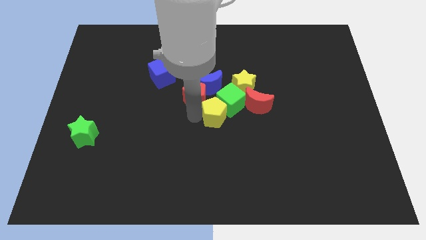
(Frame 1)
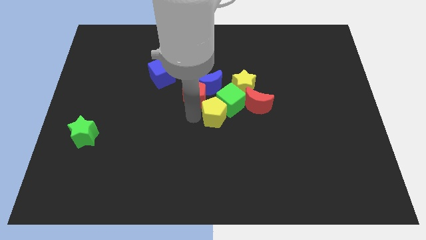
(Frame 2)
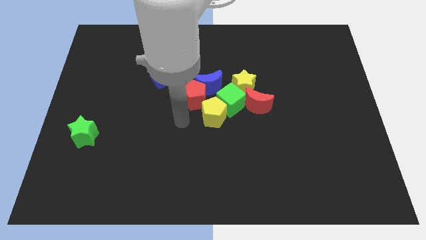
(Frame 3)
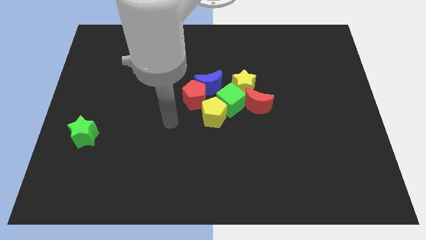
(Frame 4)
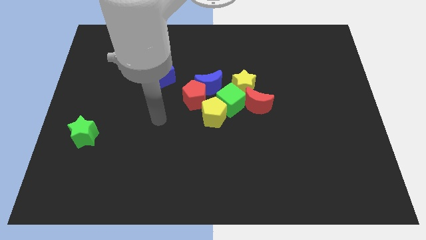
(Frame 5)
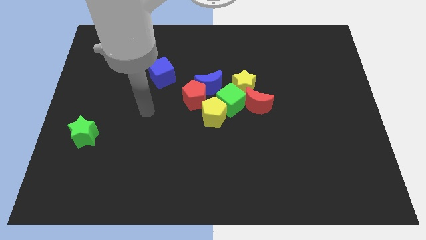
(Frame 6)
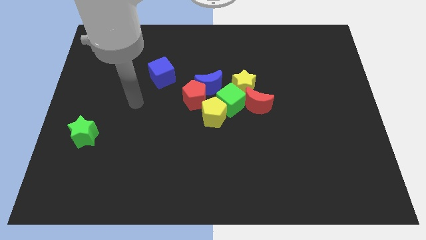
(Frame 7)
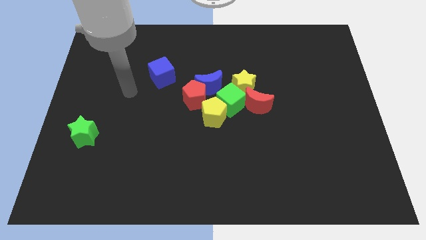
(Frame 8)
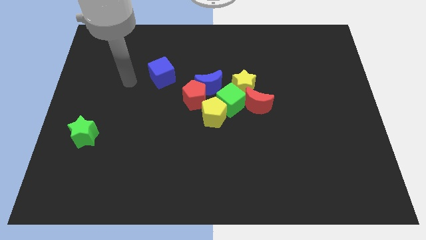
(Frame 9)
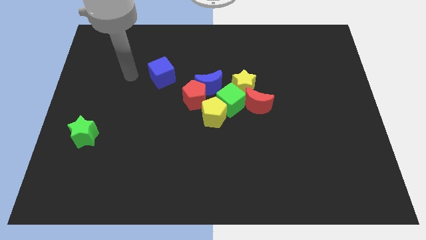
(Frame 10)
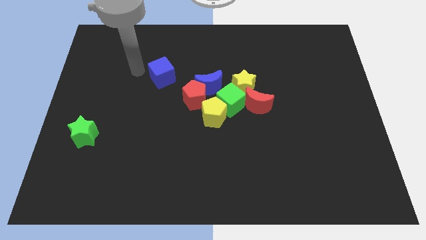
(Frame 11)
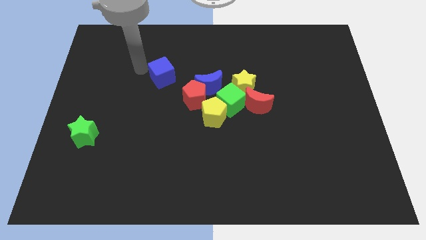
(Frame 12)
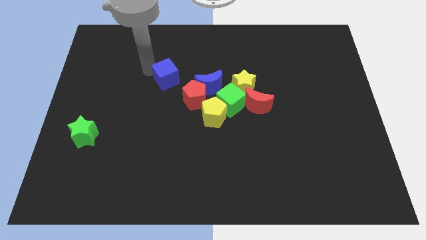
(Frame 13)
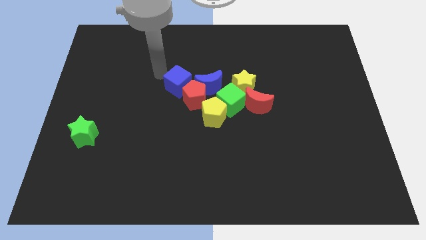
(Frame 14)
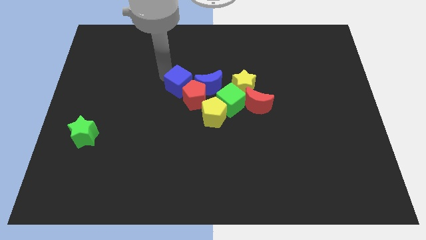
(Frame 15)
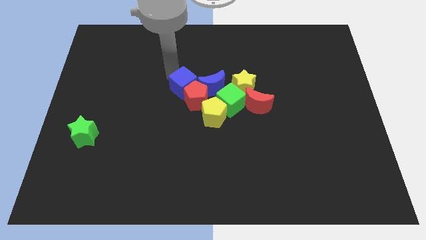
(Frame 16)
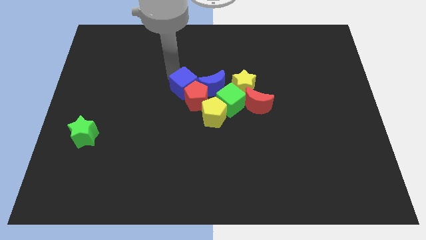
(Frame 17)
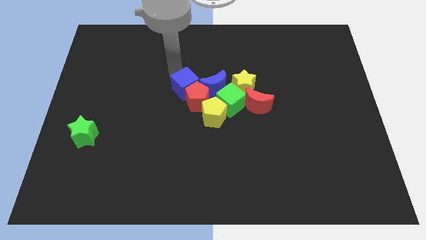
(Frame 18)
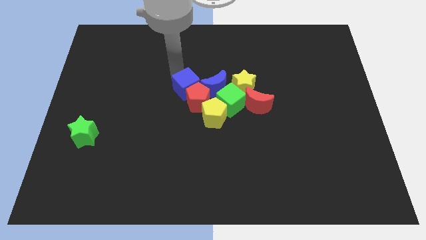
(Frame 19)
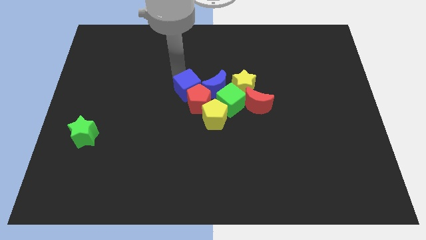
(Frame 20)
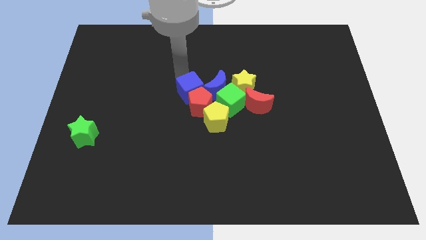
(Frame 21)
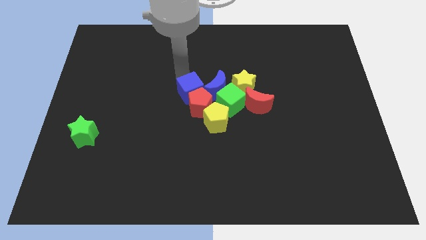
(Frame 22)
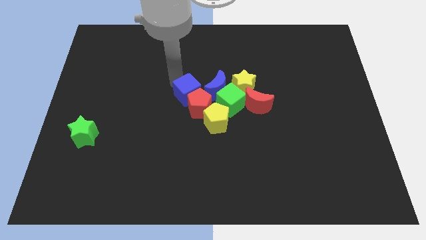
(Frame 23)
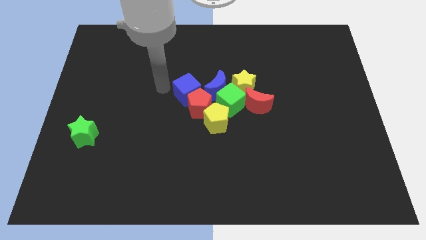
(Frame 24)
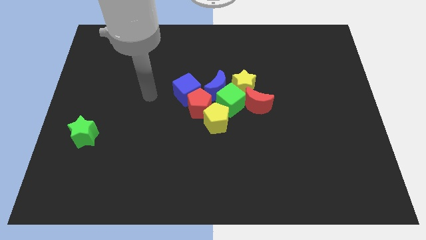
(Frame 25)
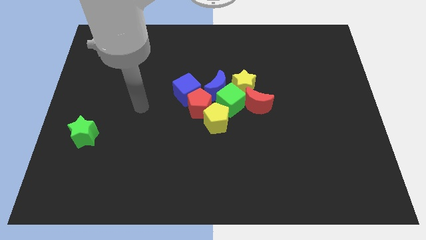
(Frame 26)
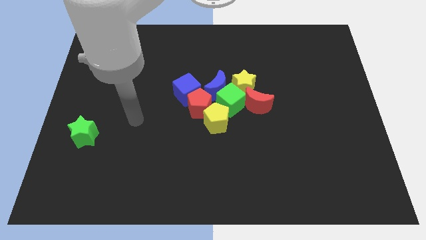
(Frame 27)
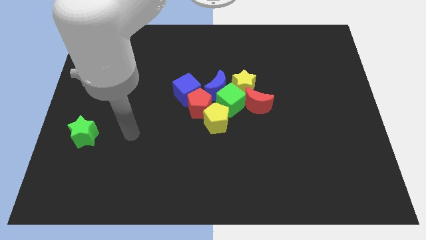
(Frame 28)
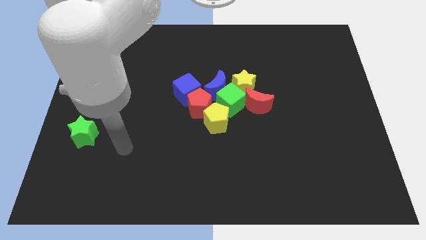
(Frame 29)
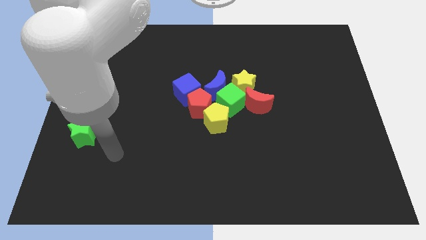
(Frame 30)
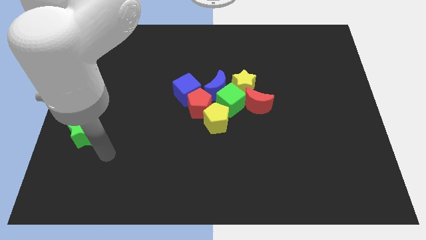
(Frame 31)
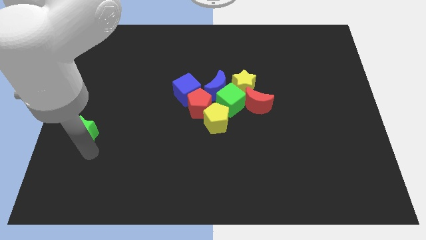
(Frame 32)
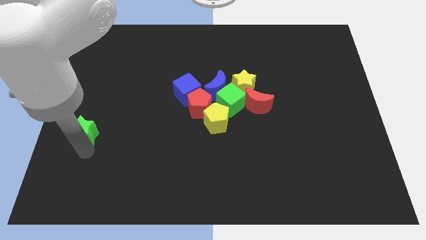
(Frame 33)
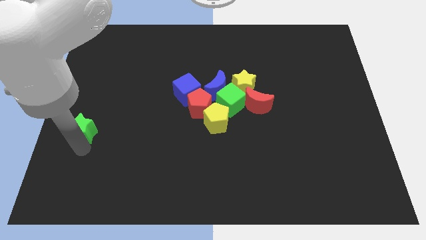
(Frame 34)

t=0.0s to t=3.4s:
push the blue cube into the group of blocks

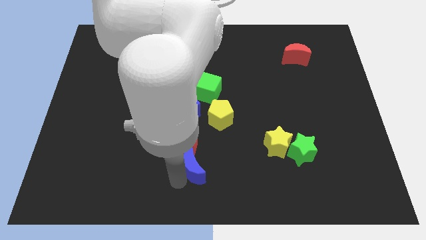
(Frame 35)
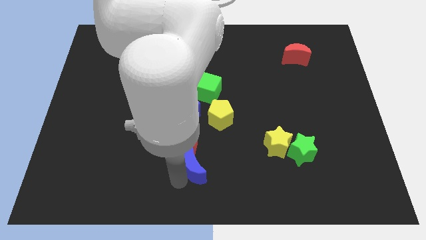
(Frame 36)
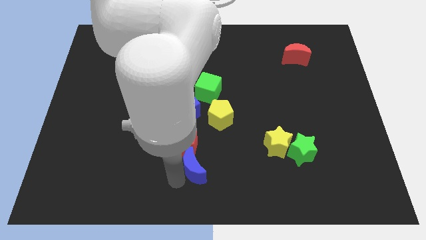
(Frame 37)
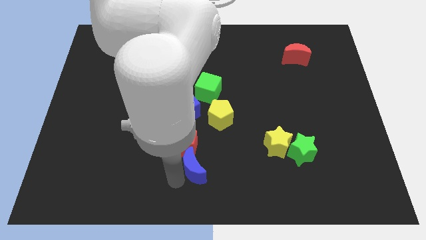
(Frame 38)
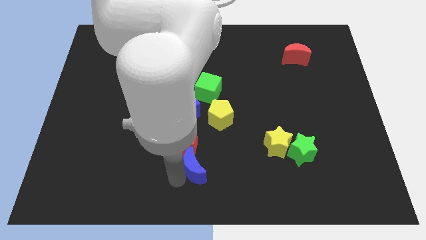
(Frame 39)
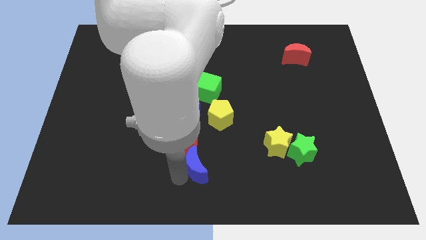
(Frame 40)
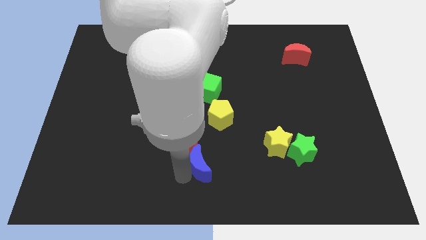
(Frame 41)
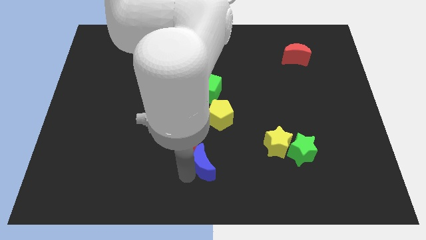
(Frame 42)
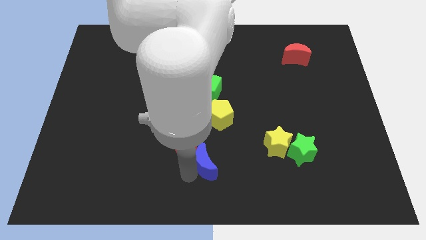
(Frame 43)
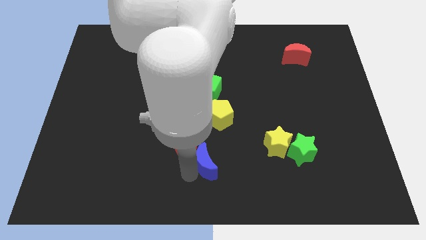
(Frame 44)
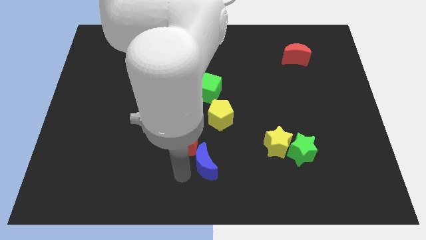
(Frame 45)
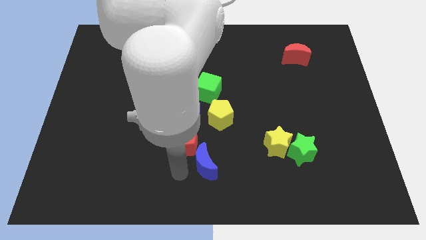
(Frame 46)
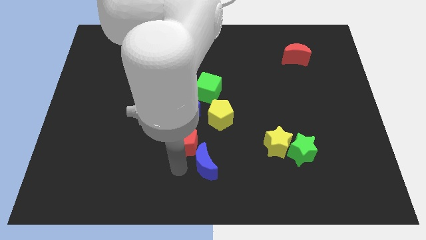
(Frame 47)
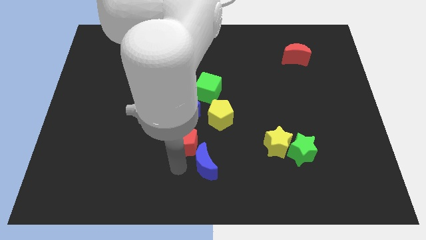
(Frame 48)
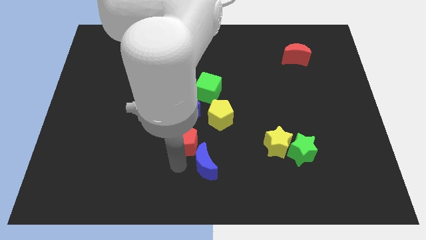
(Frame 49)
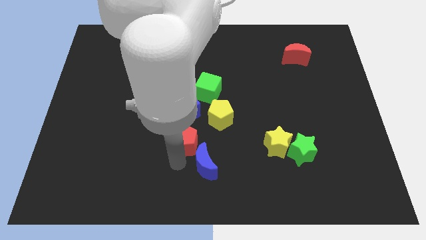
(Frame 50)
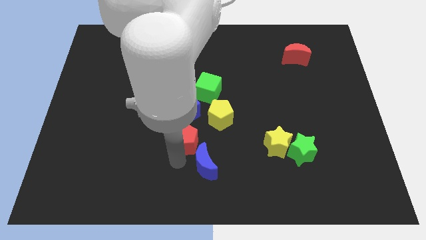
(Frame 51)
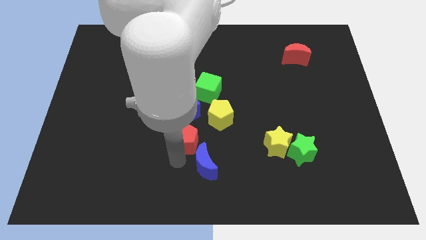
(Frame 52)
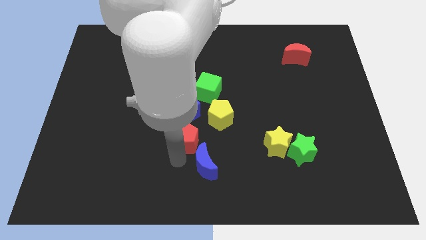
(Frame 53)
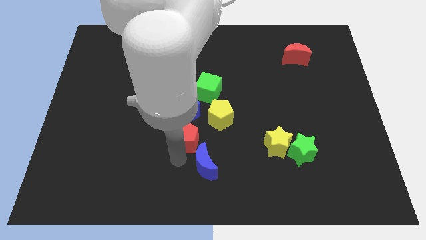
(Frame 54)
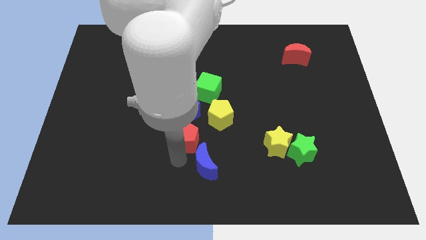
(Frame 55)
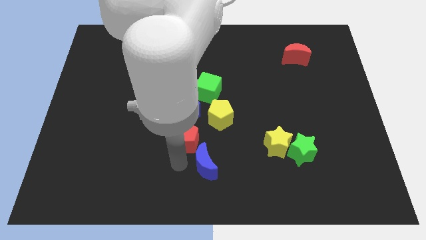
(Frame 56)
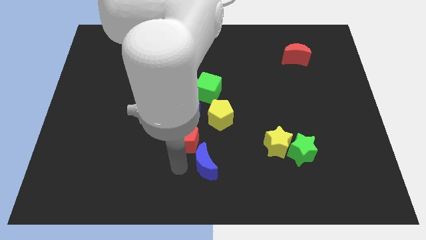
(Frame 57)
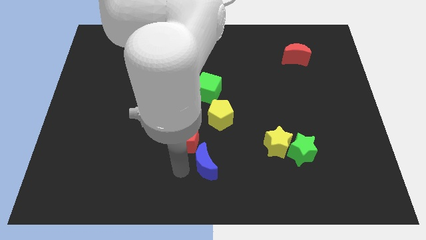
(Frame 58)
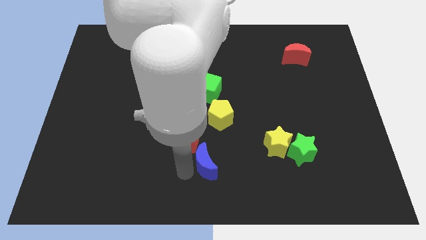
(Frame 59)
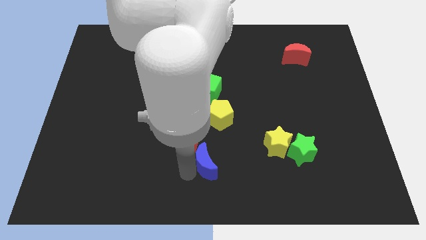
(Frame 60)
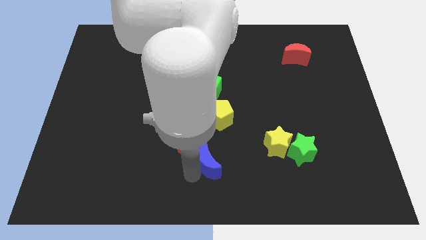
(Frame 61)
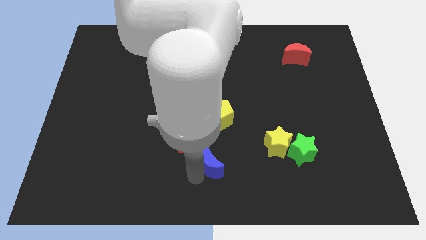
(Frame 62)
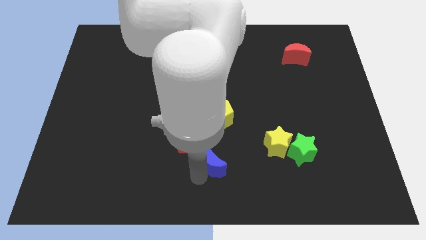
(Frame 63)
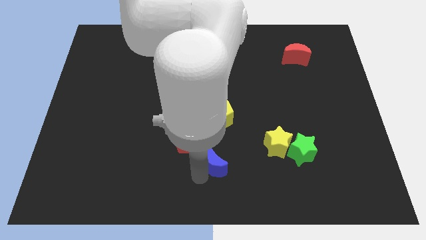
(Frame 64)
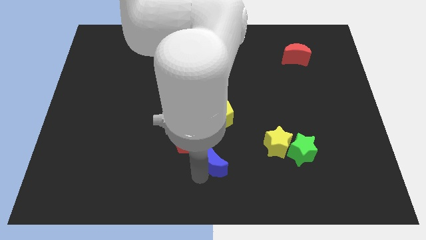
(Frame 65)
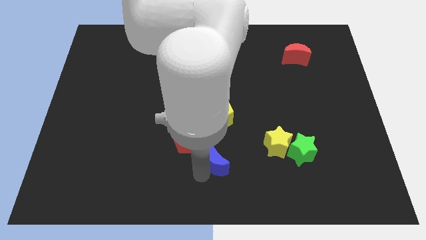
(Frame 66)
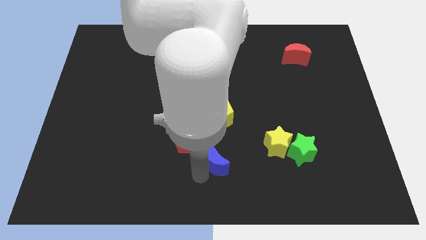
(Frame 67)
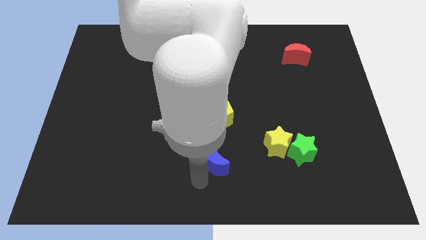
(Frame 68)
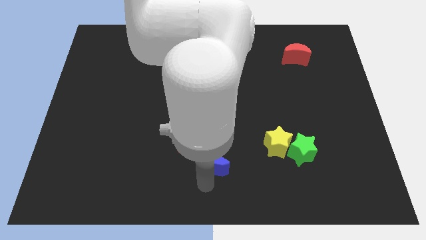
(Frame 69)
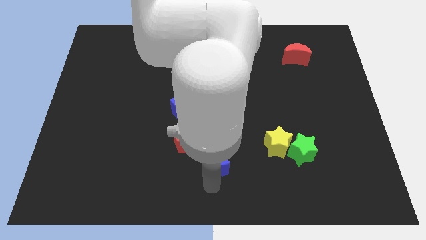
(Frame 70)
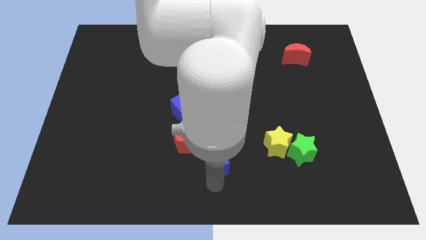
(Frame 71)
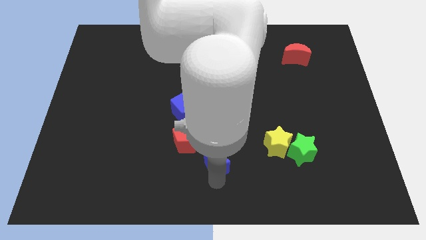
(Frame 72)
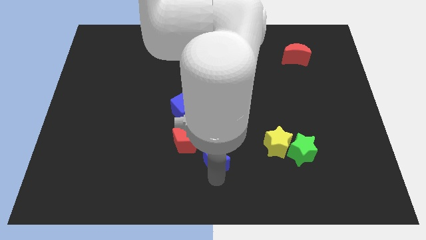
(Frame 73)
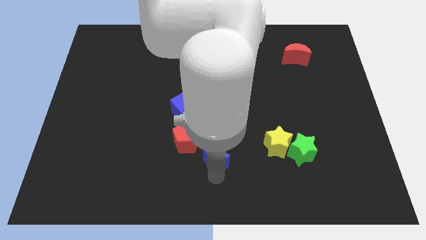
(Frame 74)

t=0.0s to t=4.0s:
move the blue moon vertically to the bottom of the yellow pentagon

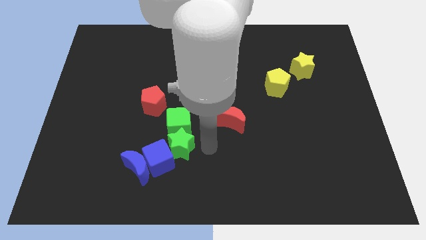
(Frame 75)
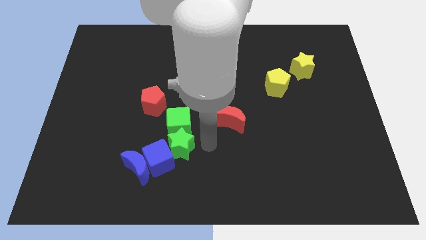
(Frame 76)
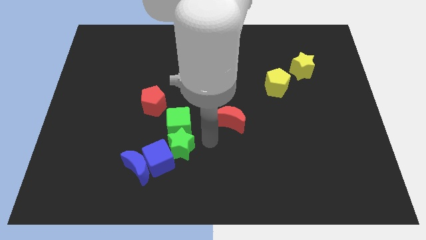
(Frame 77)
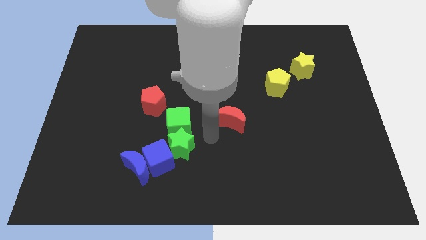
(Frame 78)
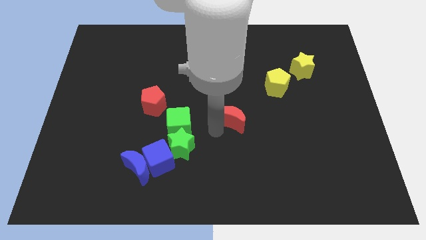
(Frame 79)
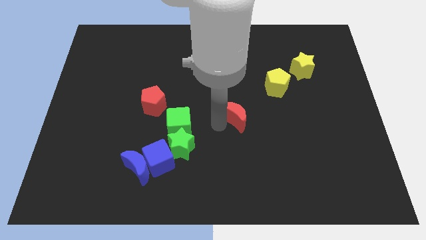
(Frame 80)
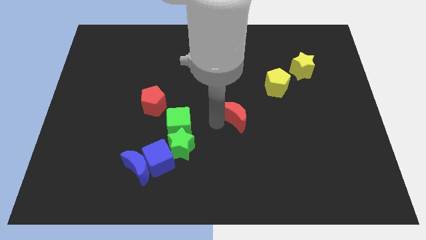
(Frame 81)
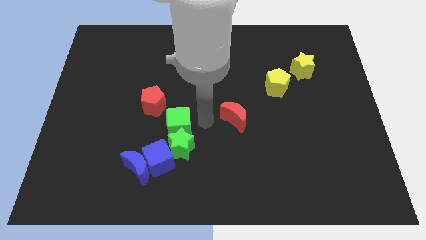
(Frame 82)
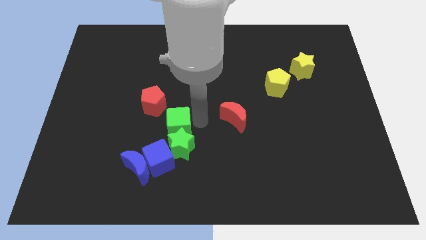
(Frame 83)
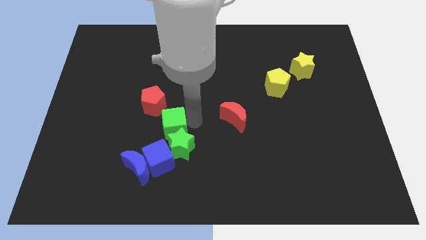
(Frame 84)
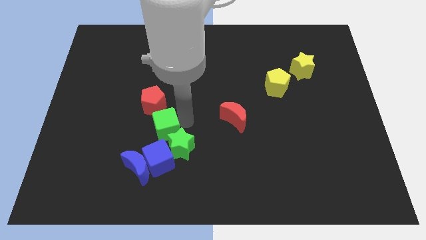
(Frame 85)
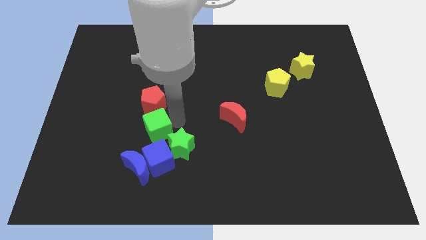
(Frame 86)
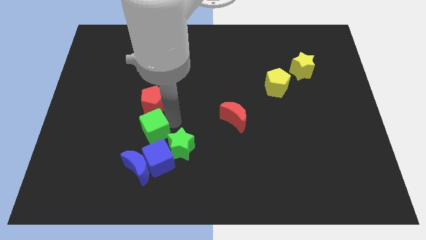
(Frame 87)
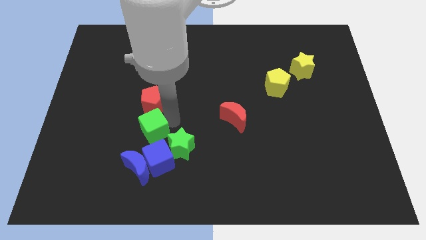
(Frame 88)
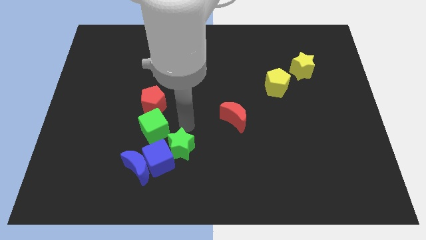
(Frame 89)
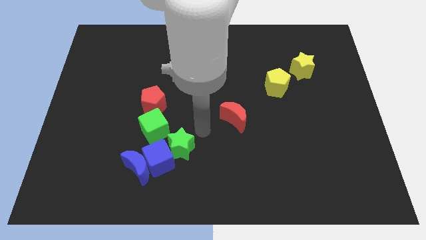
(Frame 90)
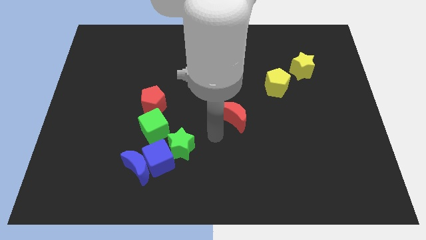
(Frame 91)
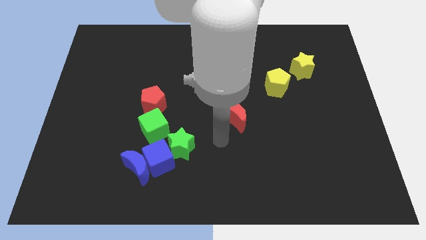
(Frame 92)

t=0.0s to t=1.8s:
move the green cube slightly to the left
